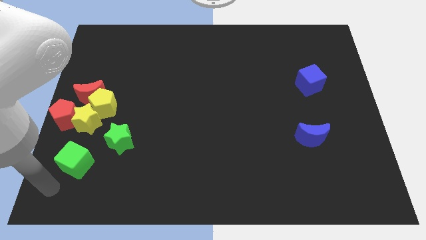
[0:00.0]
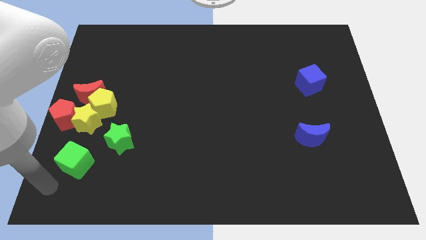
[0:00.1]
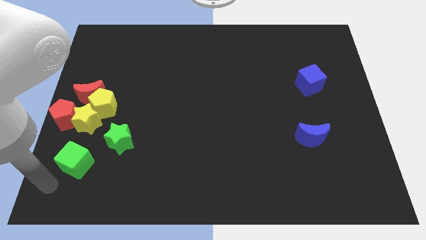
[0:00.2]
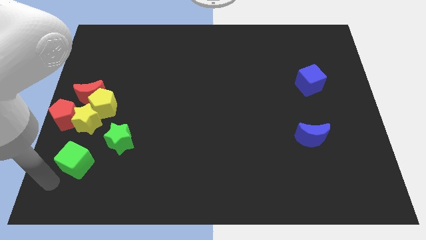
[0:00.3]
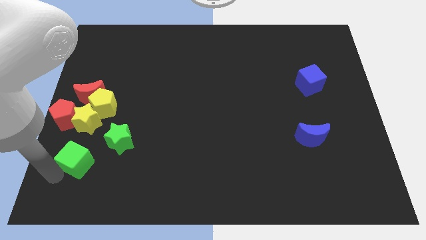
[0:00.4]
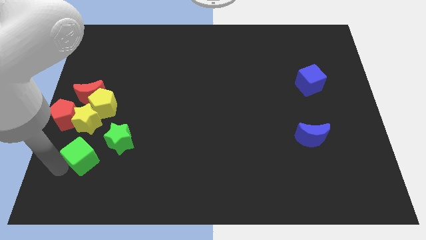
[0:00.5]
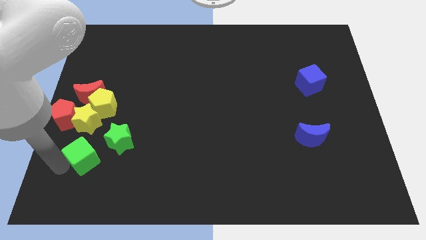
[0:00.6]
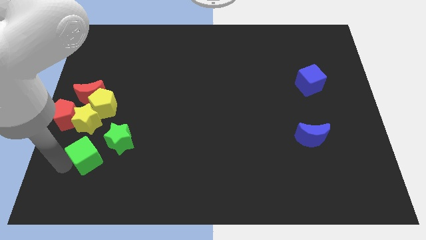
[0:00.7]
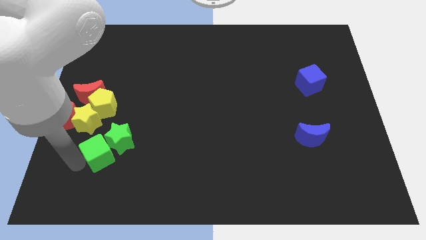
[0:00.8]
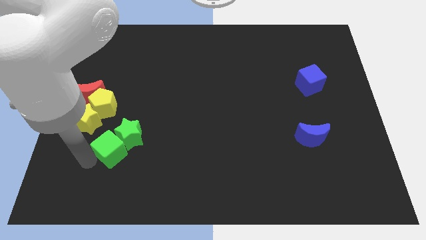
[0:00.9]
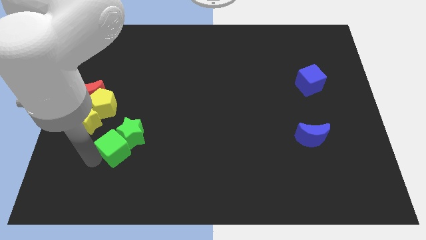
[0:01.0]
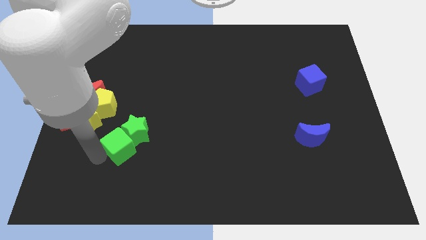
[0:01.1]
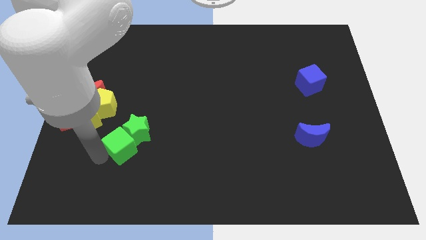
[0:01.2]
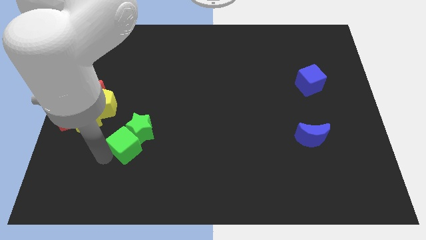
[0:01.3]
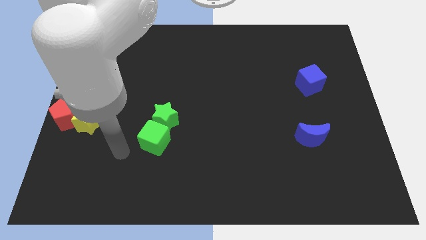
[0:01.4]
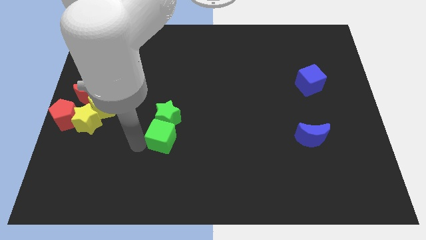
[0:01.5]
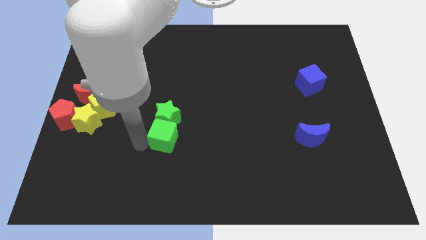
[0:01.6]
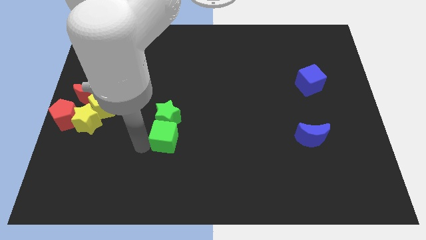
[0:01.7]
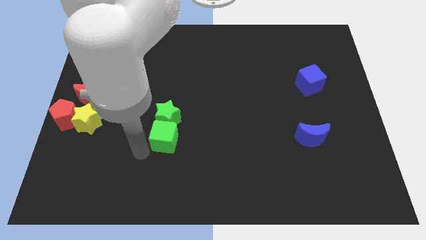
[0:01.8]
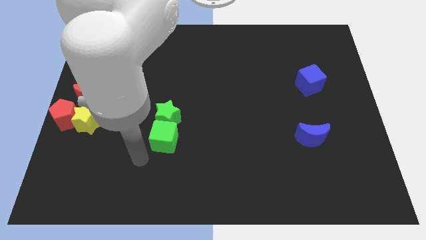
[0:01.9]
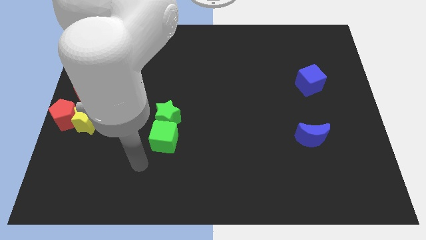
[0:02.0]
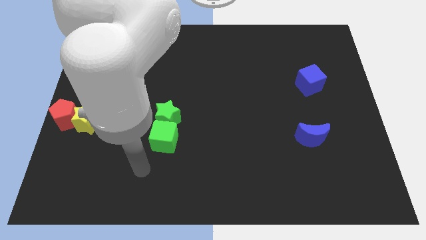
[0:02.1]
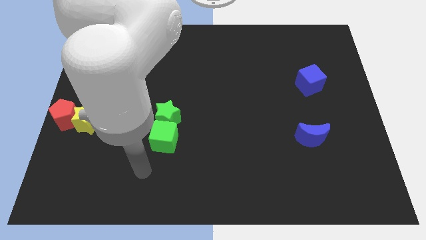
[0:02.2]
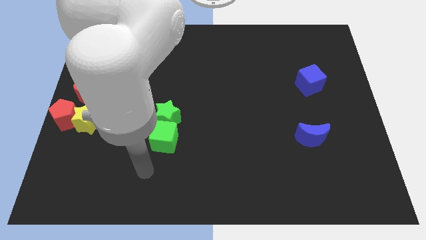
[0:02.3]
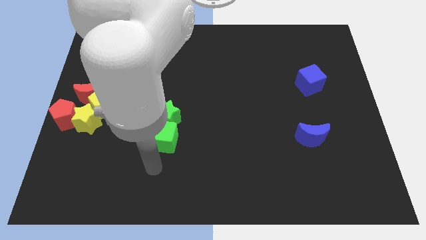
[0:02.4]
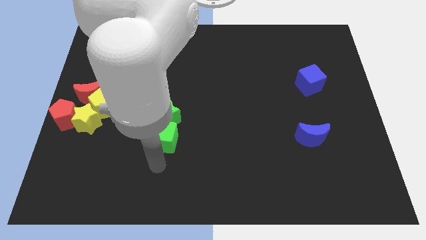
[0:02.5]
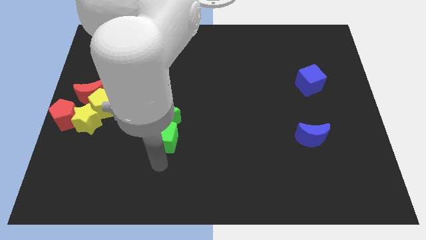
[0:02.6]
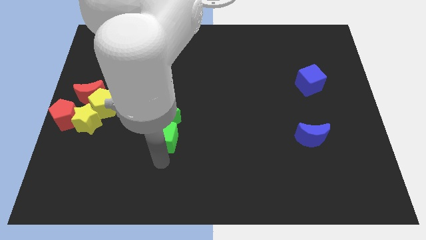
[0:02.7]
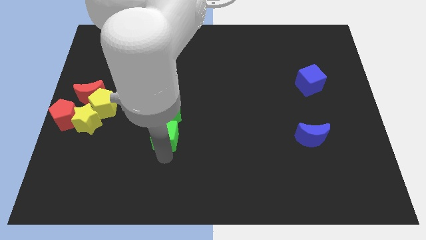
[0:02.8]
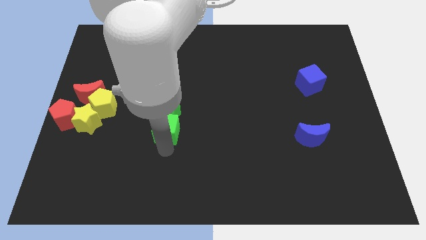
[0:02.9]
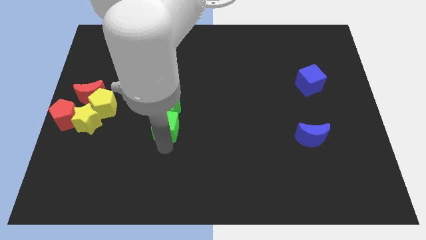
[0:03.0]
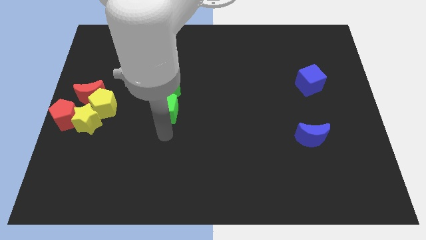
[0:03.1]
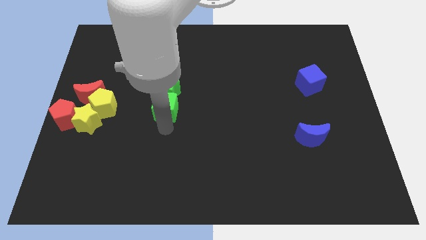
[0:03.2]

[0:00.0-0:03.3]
push the green cube into the green star

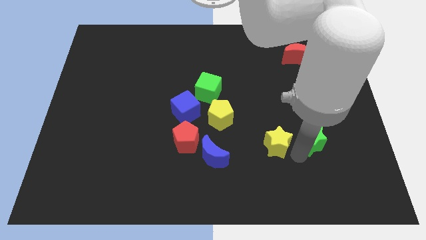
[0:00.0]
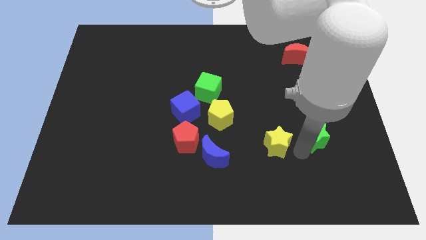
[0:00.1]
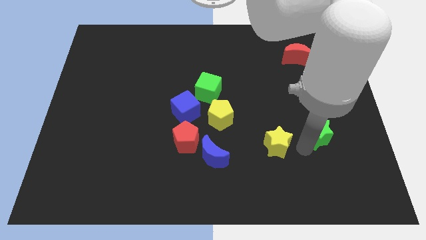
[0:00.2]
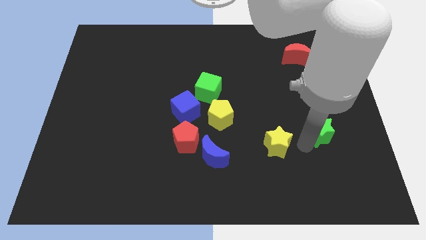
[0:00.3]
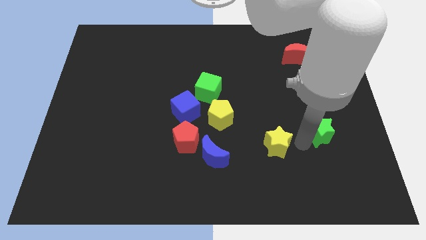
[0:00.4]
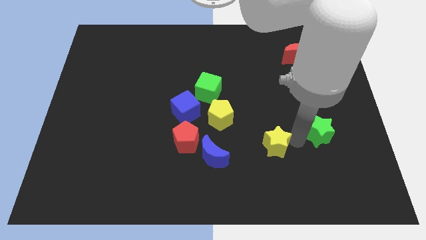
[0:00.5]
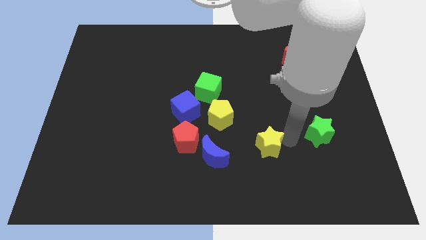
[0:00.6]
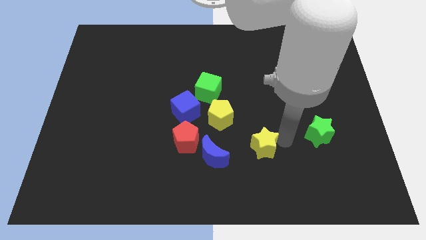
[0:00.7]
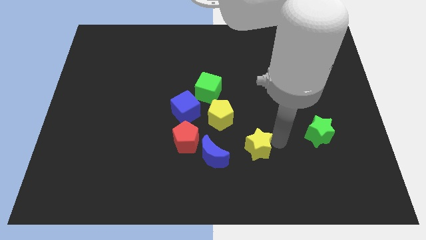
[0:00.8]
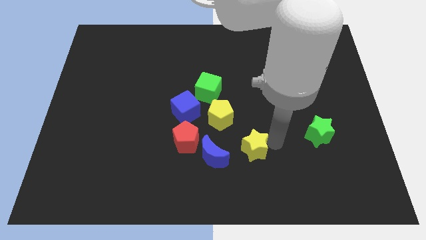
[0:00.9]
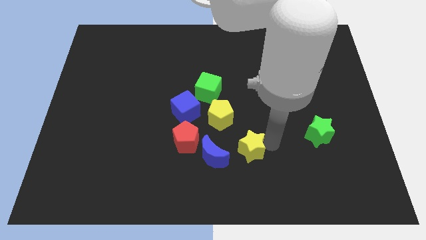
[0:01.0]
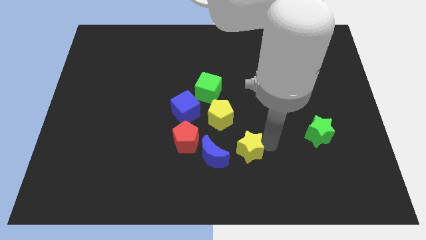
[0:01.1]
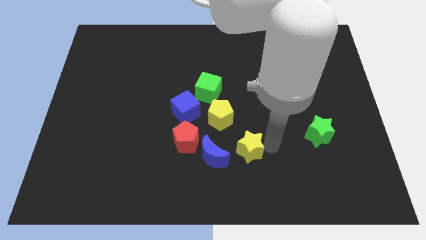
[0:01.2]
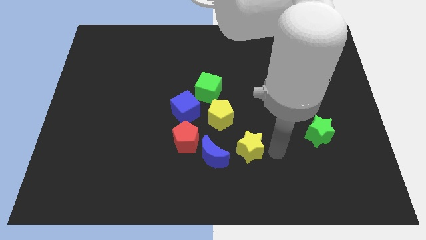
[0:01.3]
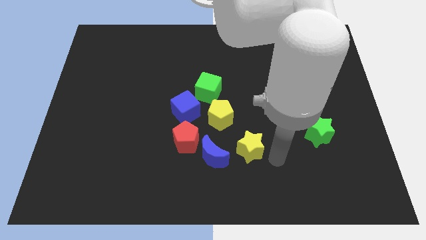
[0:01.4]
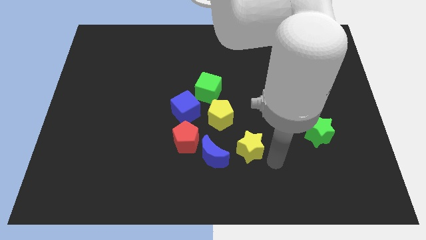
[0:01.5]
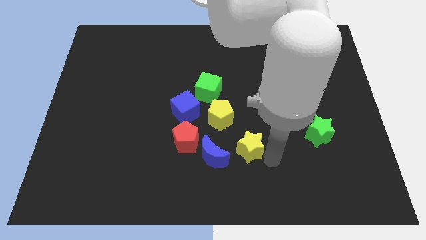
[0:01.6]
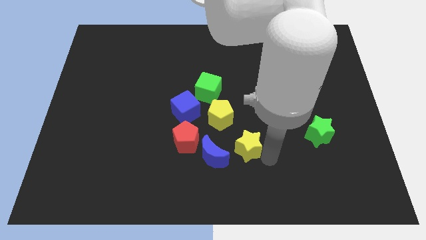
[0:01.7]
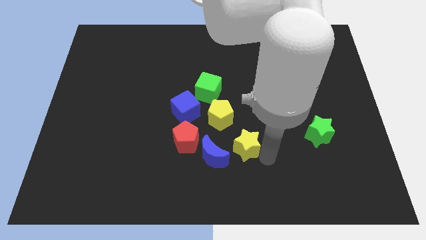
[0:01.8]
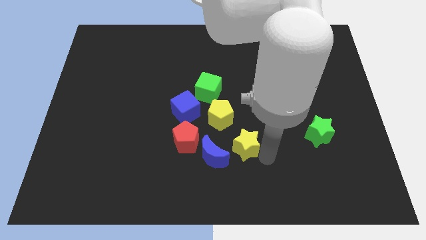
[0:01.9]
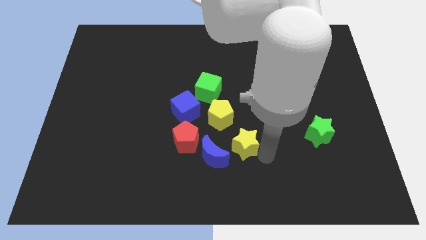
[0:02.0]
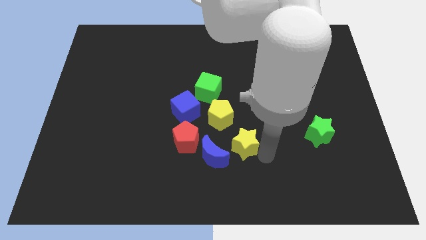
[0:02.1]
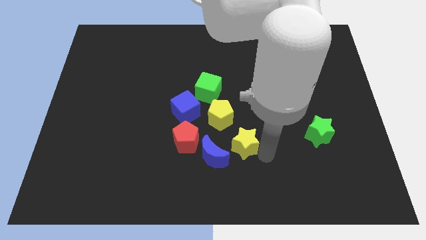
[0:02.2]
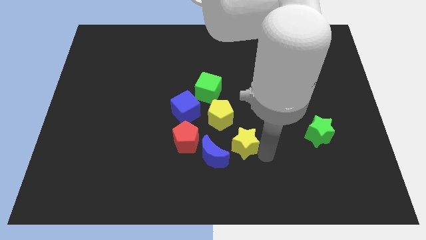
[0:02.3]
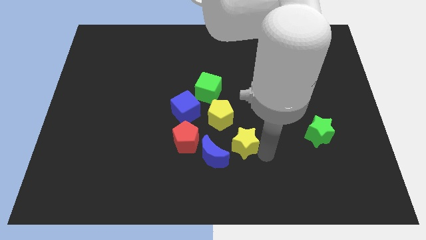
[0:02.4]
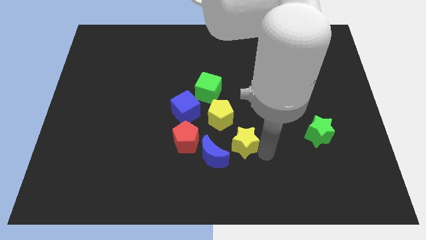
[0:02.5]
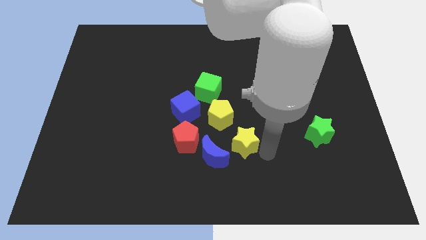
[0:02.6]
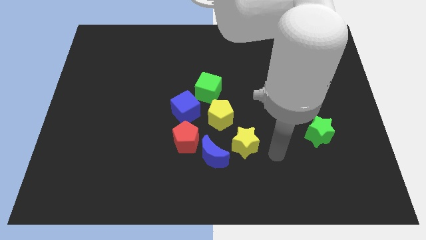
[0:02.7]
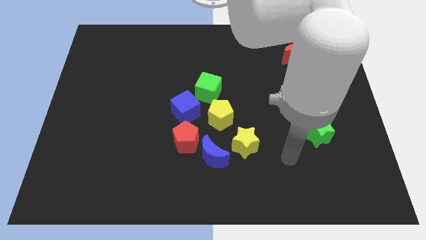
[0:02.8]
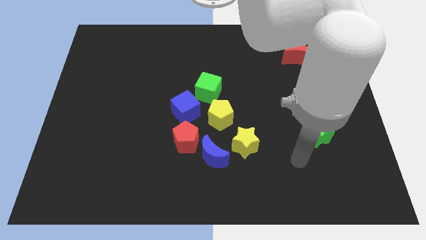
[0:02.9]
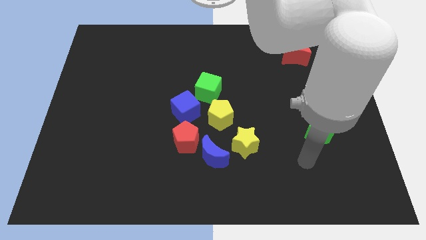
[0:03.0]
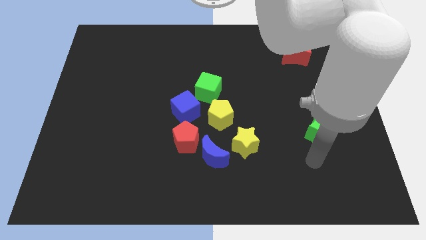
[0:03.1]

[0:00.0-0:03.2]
move the yellow star towards the group of blocks

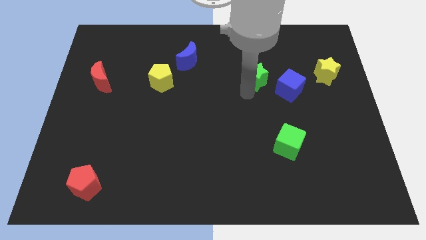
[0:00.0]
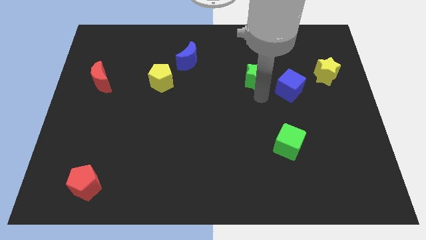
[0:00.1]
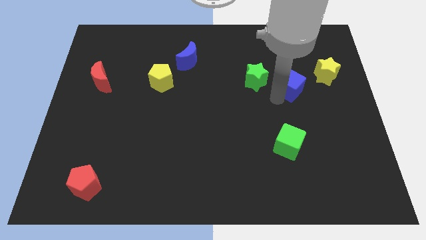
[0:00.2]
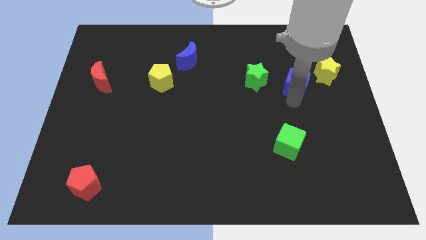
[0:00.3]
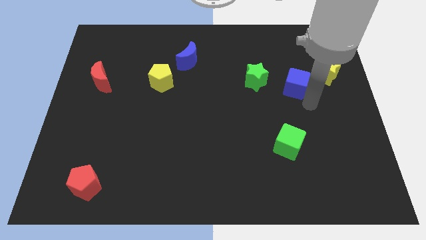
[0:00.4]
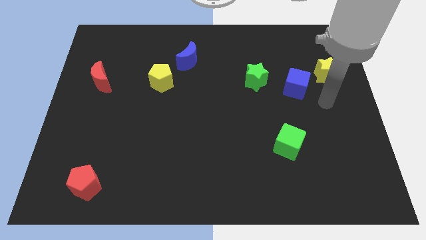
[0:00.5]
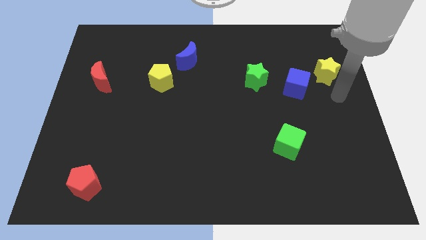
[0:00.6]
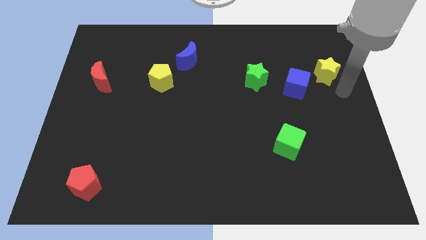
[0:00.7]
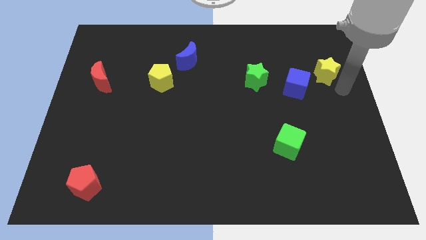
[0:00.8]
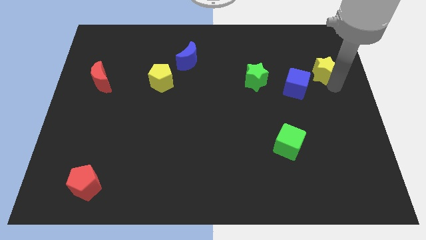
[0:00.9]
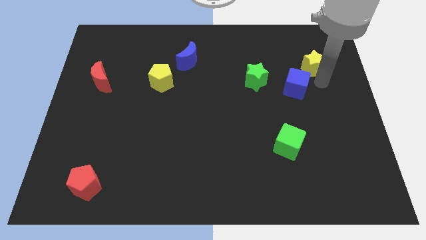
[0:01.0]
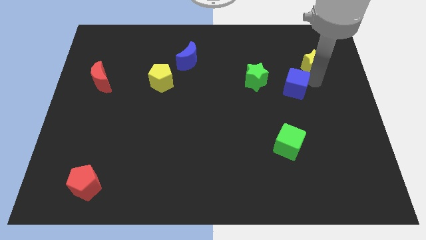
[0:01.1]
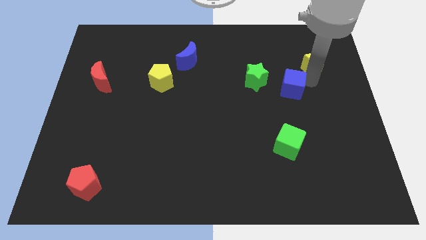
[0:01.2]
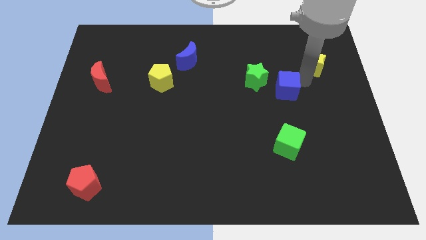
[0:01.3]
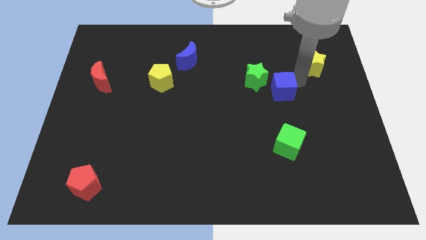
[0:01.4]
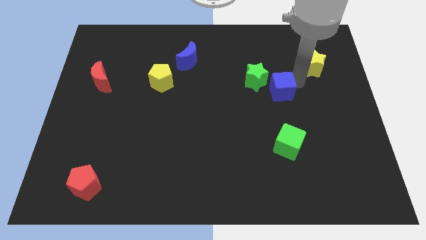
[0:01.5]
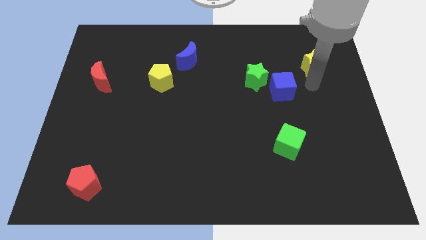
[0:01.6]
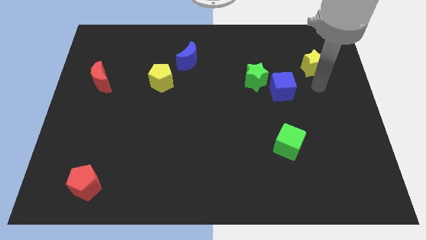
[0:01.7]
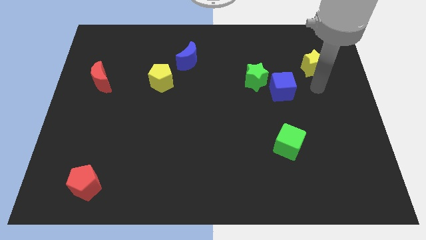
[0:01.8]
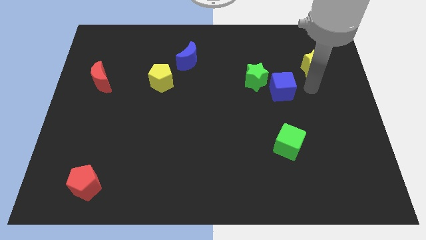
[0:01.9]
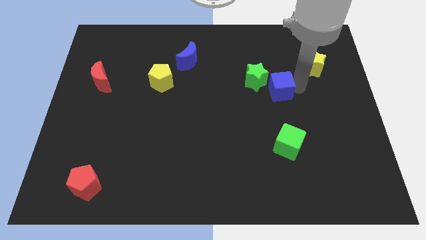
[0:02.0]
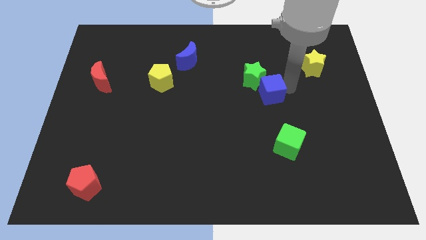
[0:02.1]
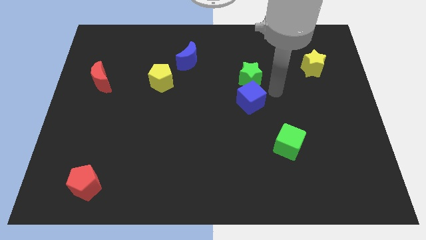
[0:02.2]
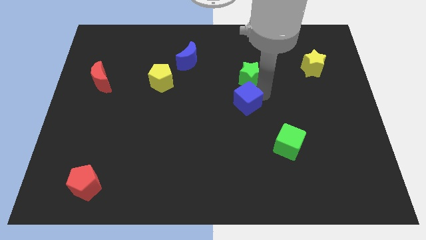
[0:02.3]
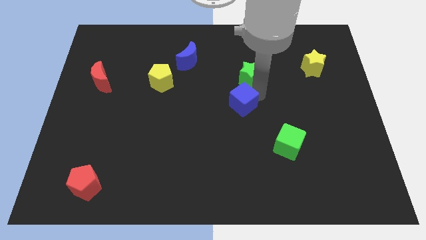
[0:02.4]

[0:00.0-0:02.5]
place blue cube below green star

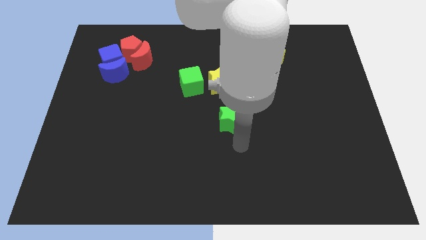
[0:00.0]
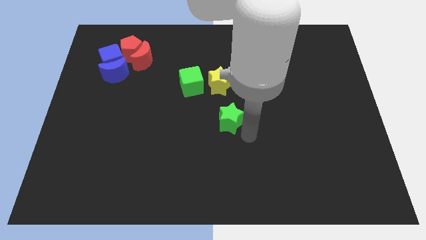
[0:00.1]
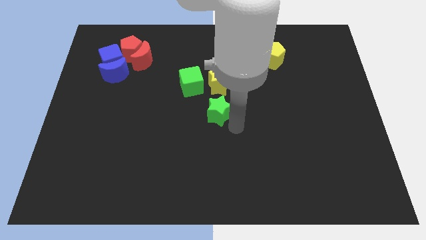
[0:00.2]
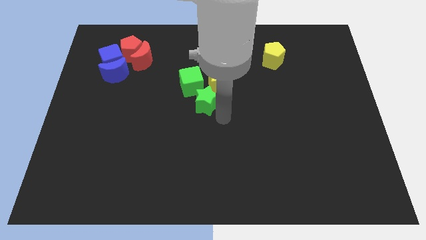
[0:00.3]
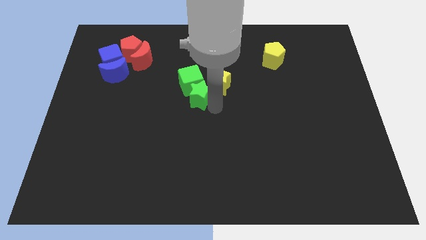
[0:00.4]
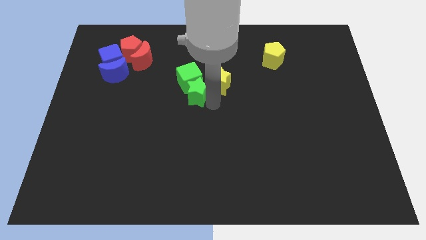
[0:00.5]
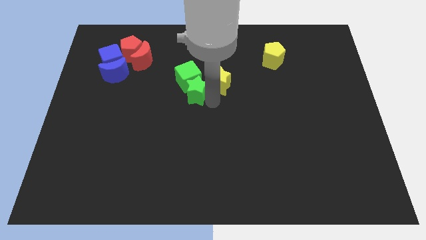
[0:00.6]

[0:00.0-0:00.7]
push green star into green cube
